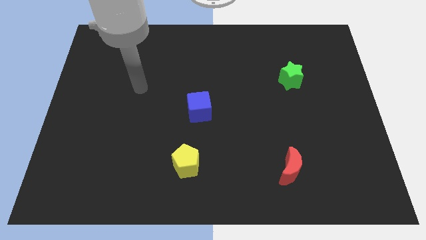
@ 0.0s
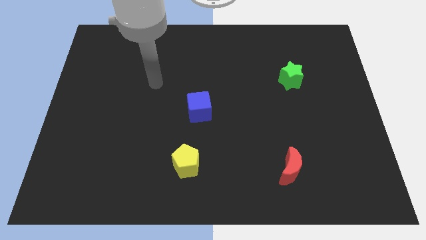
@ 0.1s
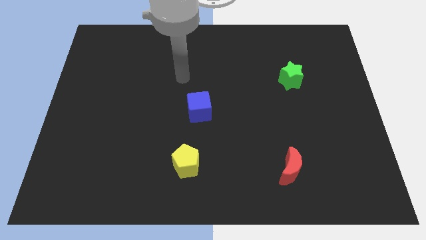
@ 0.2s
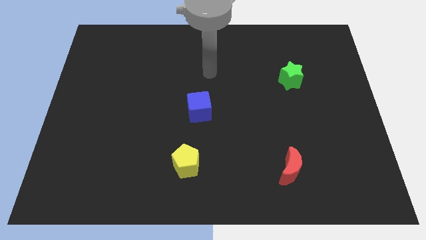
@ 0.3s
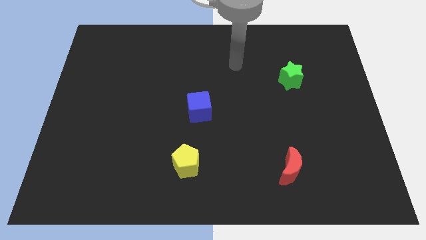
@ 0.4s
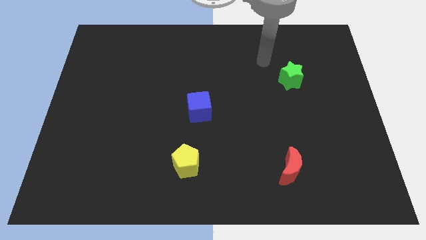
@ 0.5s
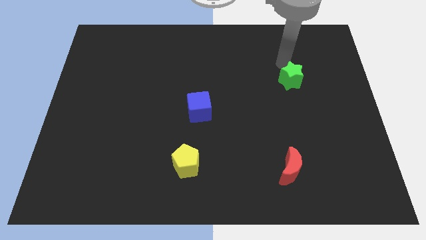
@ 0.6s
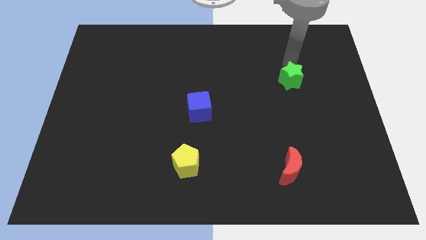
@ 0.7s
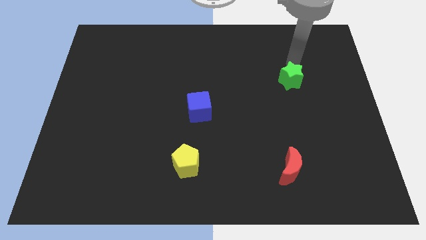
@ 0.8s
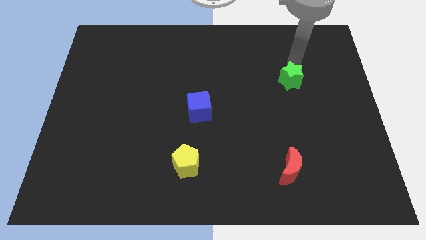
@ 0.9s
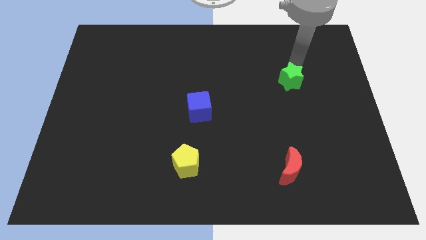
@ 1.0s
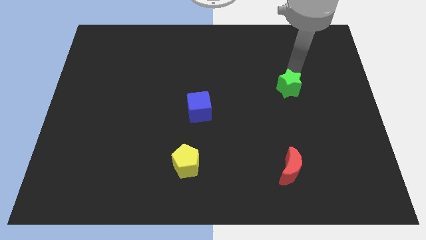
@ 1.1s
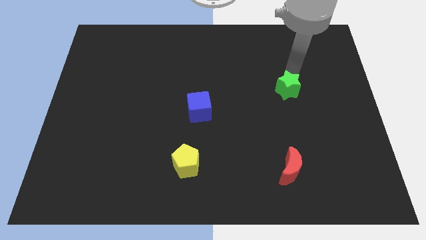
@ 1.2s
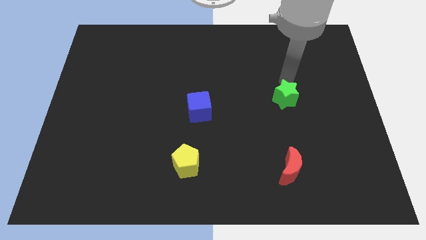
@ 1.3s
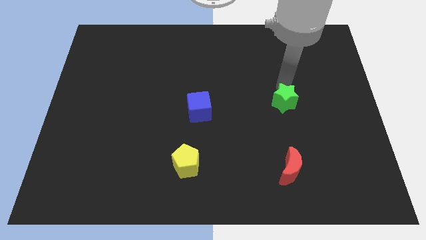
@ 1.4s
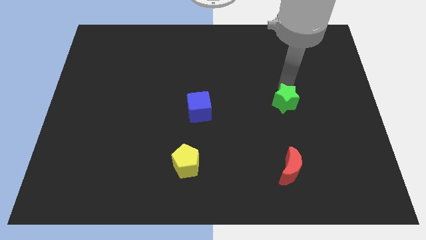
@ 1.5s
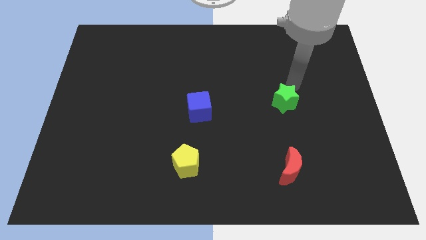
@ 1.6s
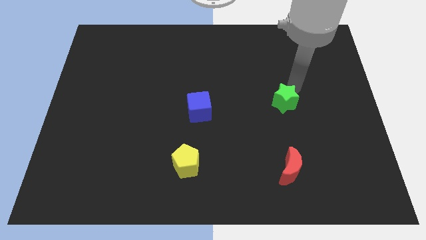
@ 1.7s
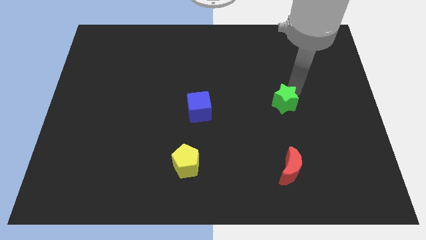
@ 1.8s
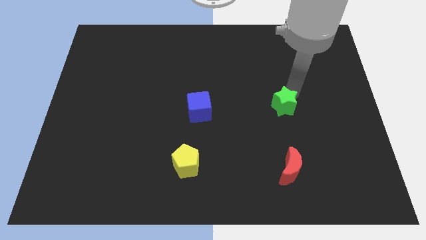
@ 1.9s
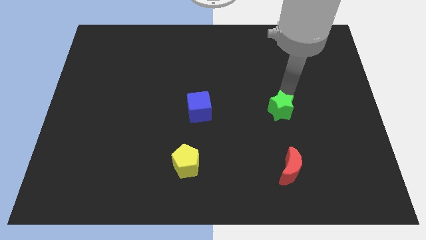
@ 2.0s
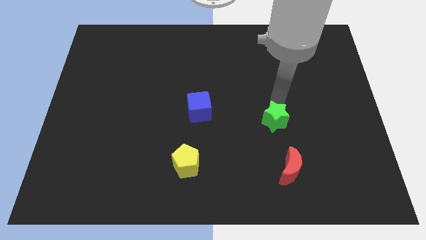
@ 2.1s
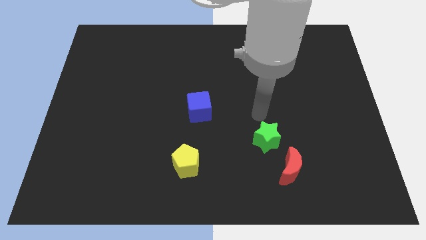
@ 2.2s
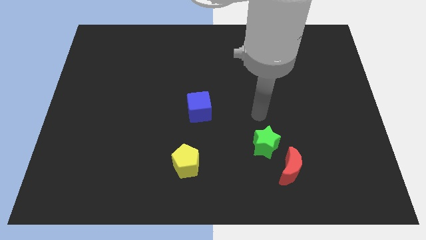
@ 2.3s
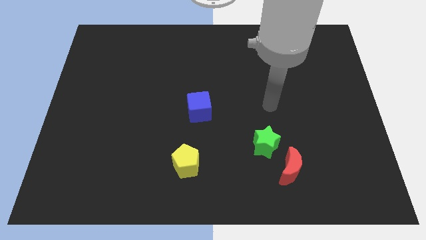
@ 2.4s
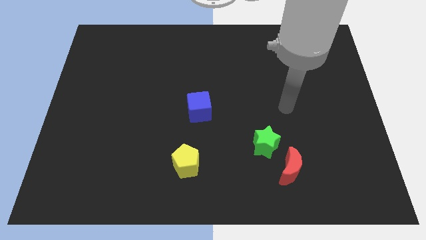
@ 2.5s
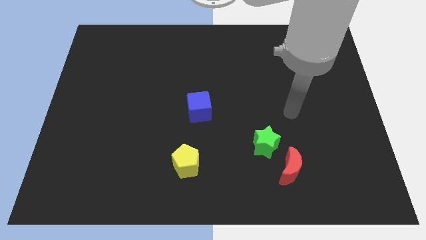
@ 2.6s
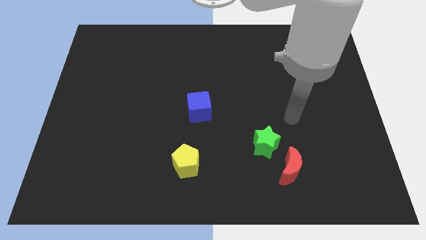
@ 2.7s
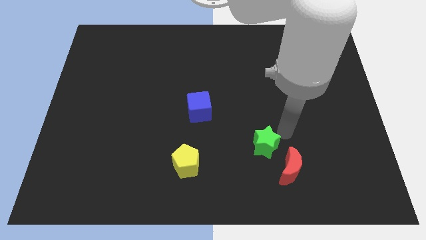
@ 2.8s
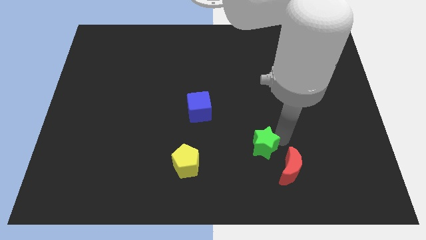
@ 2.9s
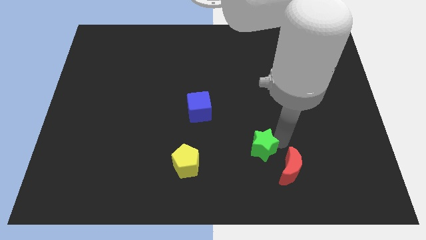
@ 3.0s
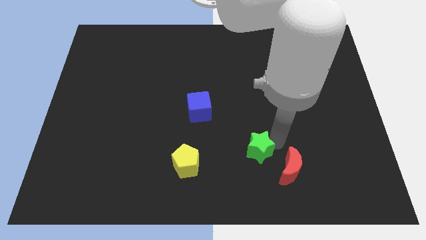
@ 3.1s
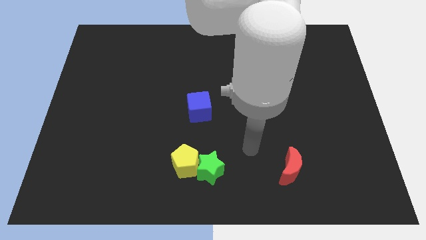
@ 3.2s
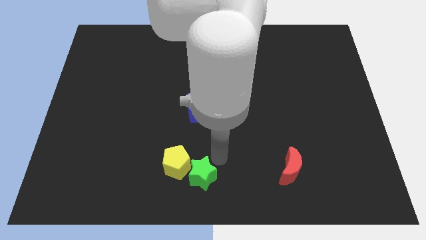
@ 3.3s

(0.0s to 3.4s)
move the green block towards the yellow block

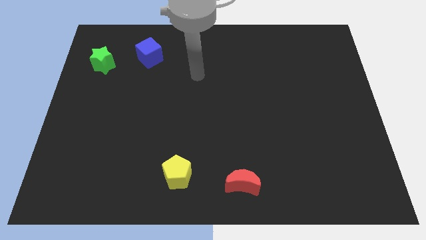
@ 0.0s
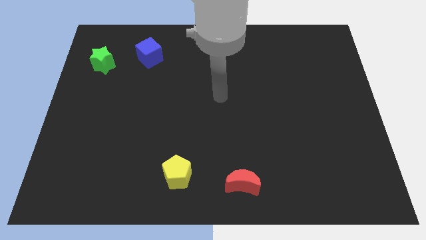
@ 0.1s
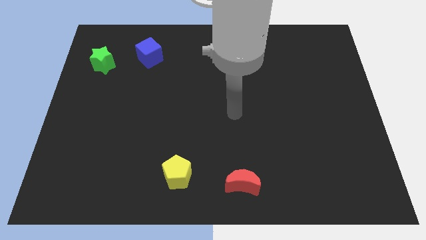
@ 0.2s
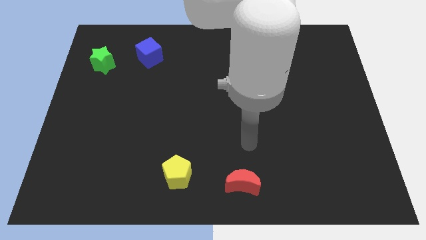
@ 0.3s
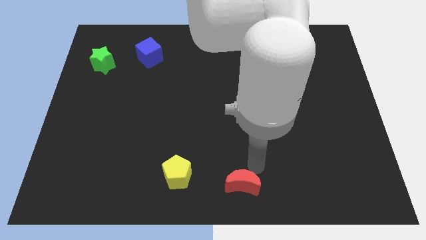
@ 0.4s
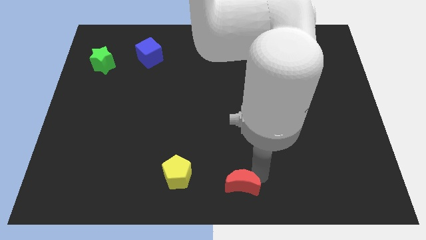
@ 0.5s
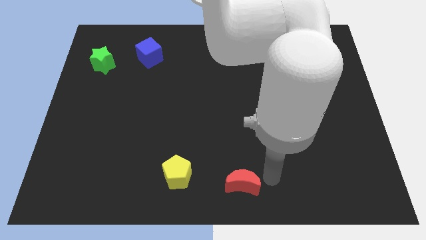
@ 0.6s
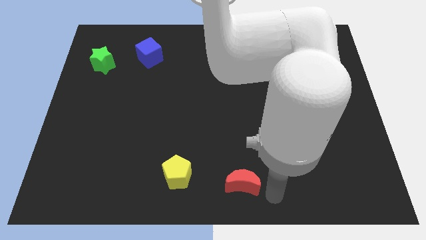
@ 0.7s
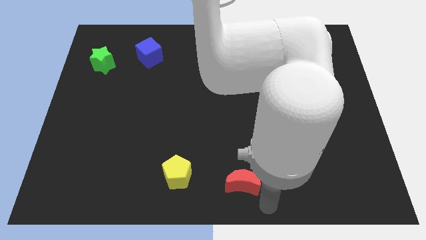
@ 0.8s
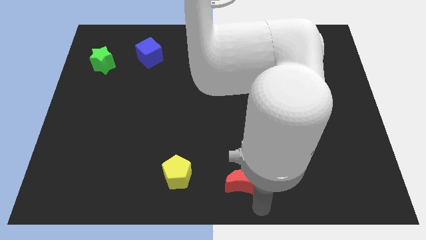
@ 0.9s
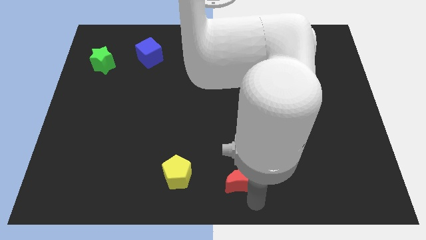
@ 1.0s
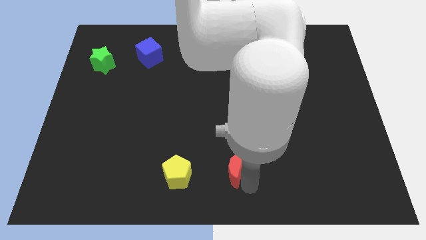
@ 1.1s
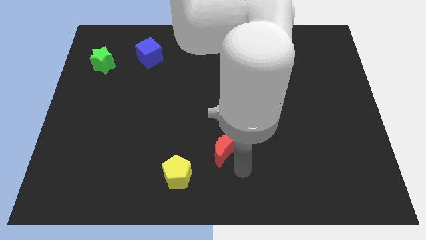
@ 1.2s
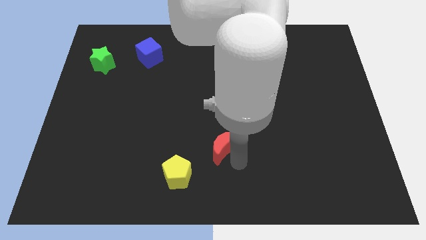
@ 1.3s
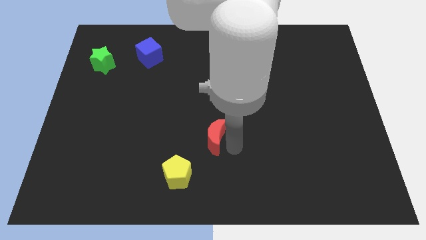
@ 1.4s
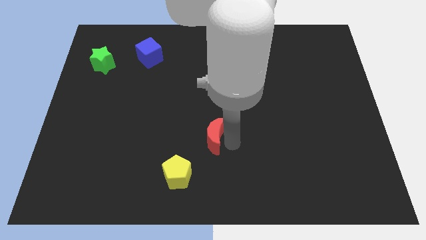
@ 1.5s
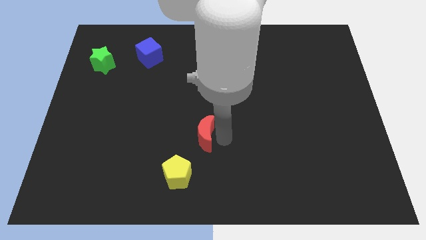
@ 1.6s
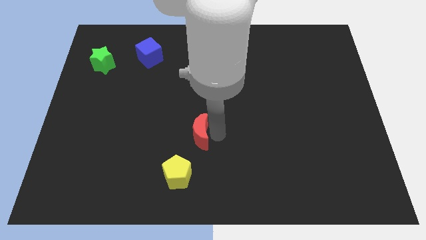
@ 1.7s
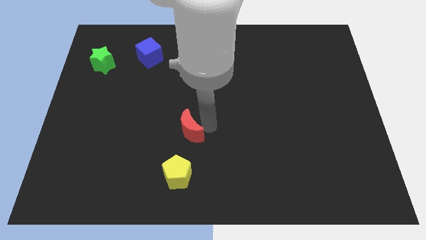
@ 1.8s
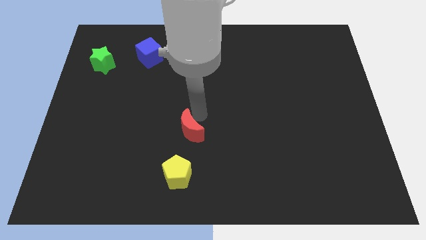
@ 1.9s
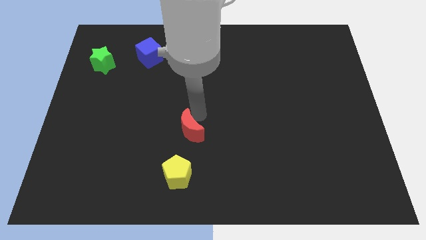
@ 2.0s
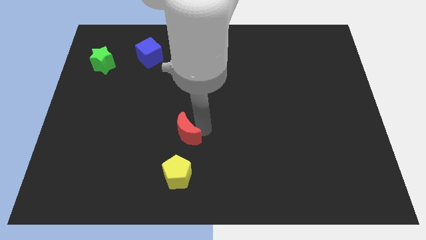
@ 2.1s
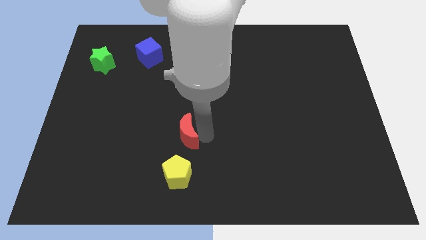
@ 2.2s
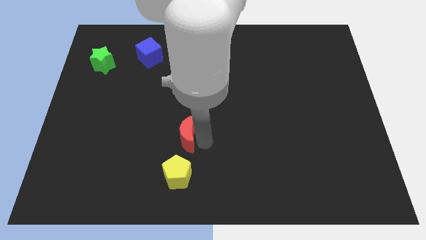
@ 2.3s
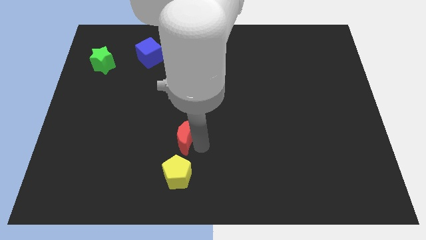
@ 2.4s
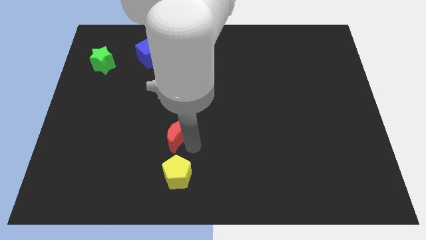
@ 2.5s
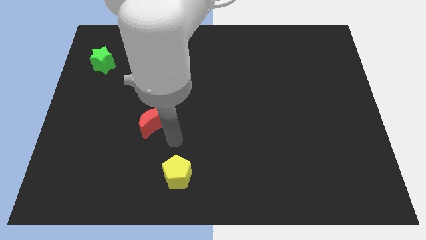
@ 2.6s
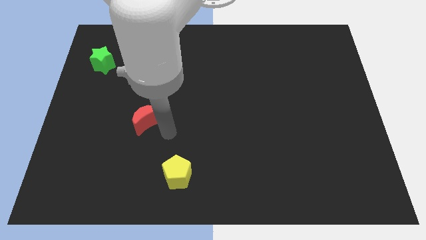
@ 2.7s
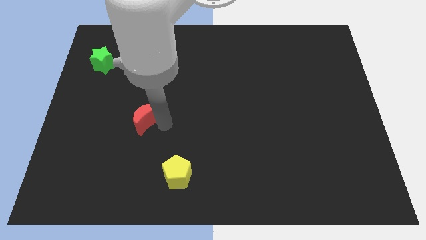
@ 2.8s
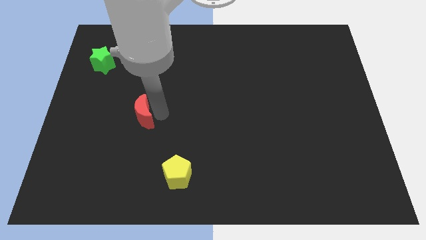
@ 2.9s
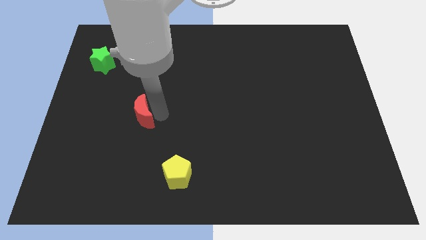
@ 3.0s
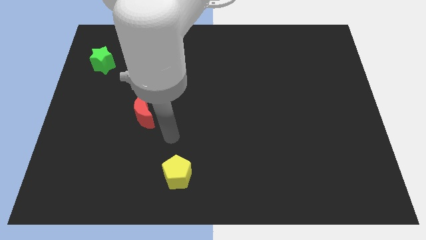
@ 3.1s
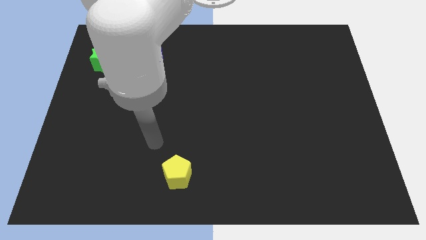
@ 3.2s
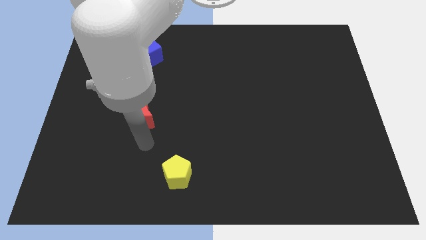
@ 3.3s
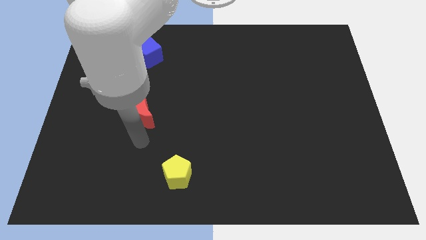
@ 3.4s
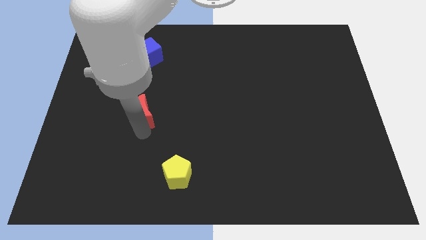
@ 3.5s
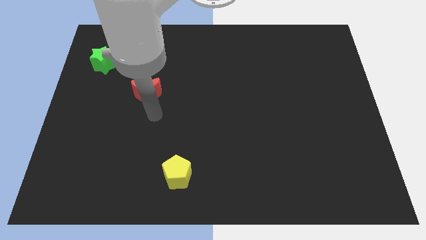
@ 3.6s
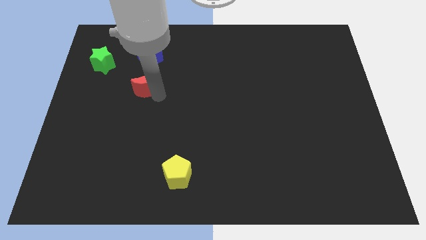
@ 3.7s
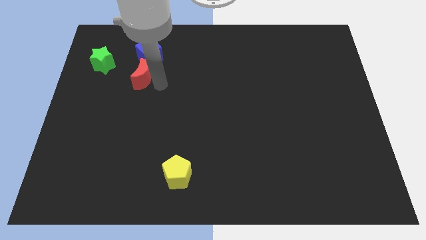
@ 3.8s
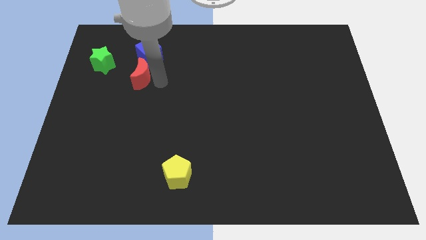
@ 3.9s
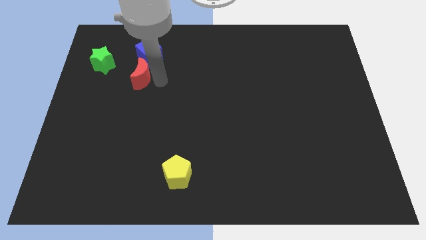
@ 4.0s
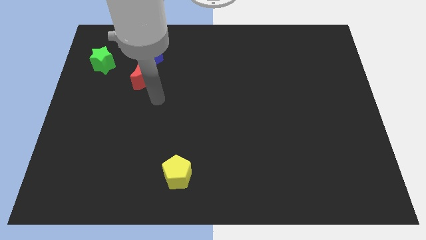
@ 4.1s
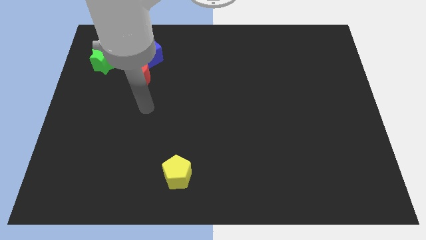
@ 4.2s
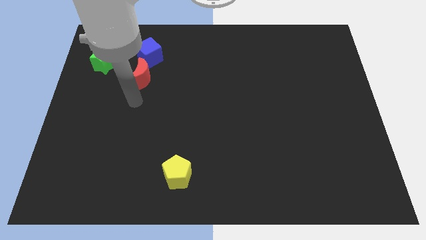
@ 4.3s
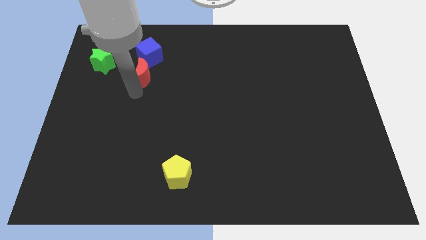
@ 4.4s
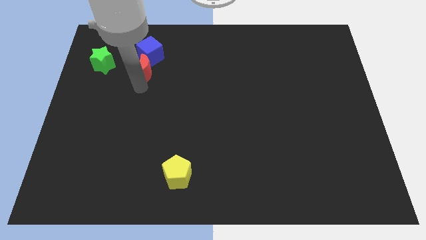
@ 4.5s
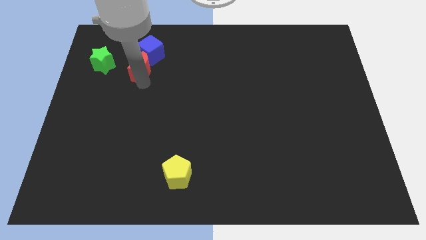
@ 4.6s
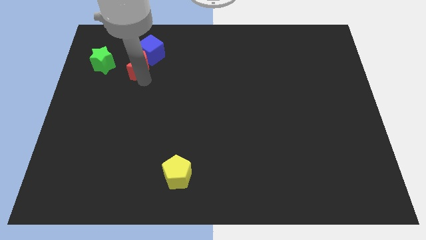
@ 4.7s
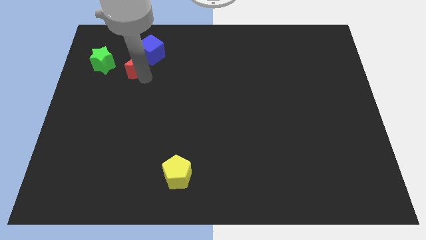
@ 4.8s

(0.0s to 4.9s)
slide the moon close to the blue cube
